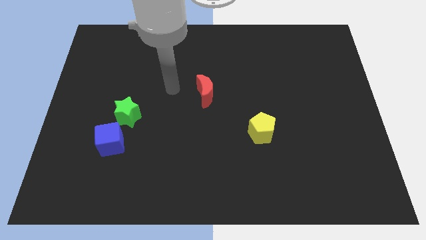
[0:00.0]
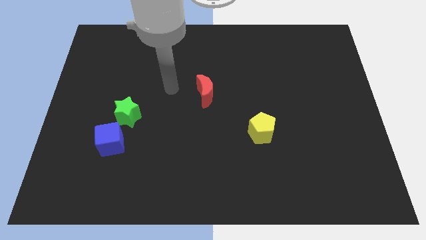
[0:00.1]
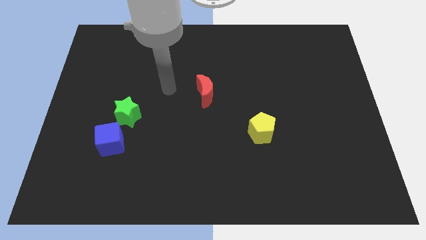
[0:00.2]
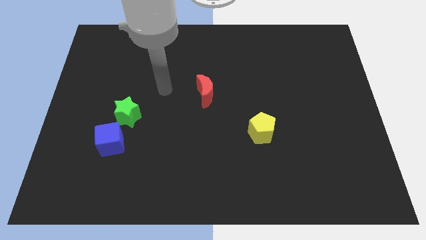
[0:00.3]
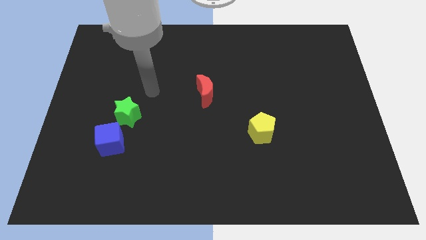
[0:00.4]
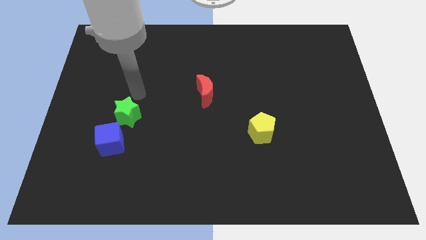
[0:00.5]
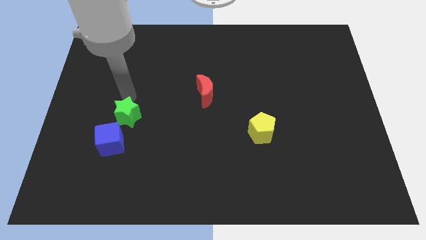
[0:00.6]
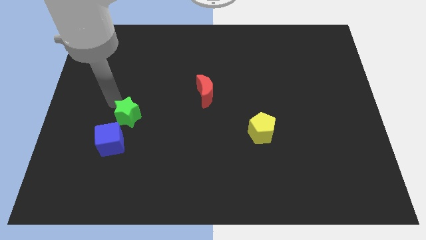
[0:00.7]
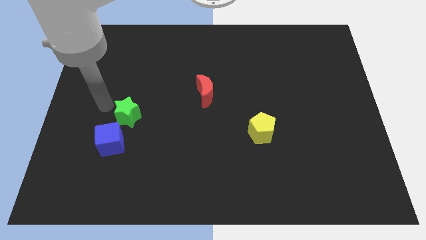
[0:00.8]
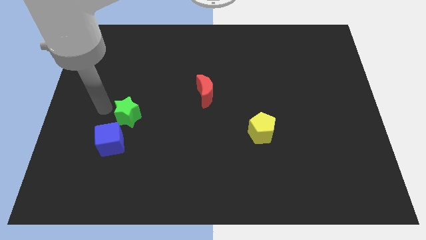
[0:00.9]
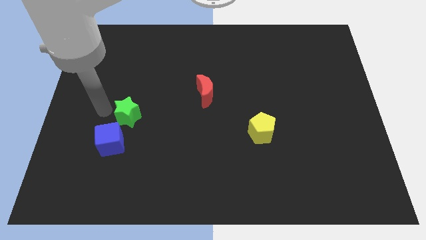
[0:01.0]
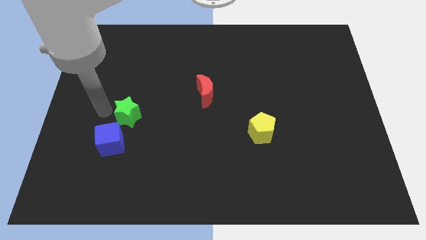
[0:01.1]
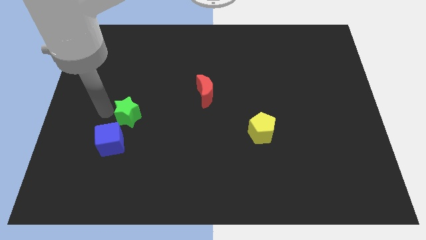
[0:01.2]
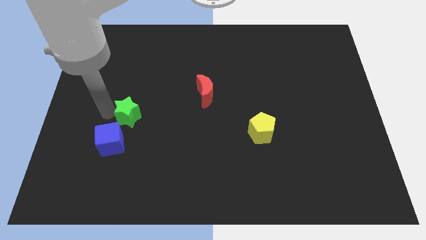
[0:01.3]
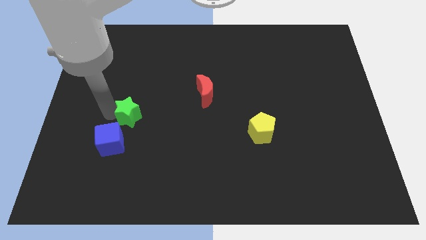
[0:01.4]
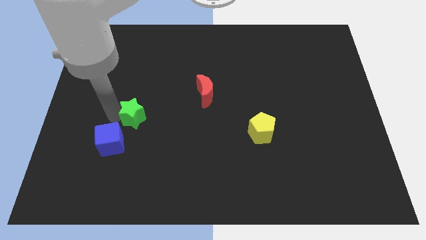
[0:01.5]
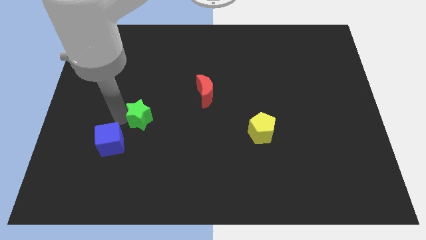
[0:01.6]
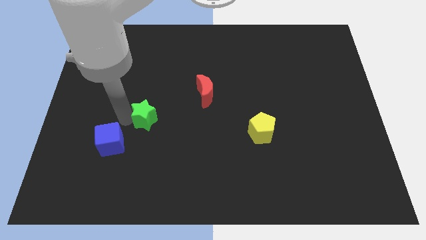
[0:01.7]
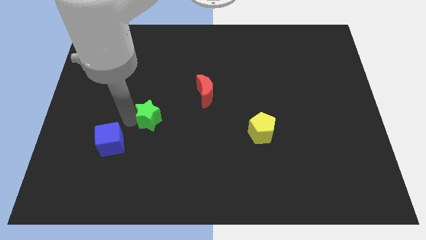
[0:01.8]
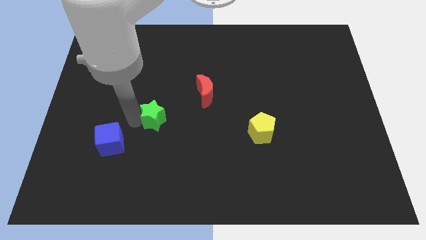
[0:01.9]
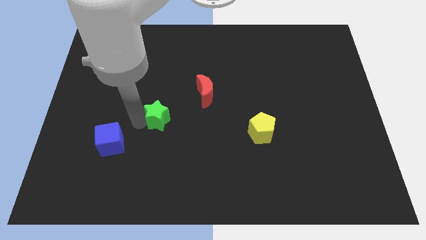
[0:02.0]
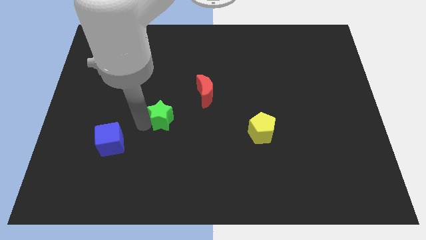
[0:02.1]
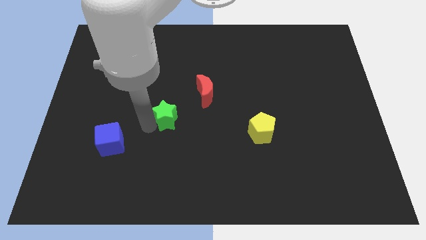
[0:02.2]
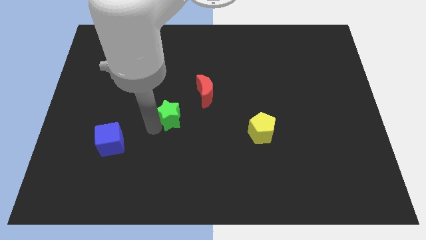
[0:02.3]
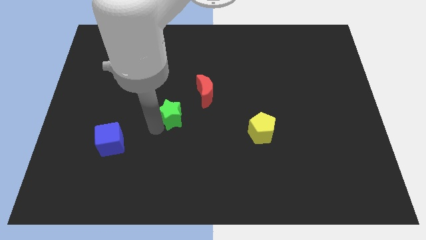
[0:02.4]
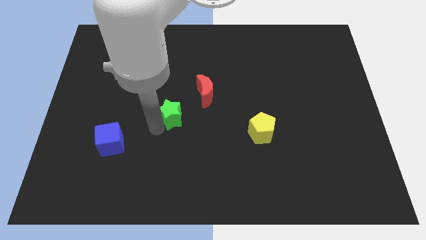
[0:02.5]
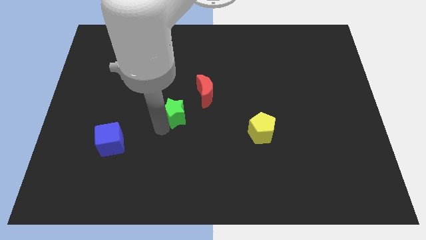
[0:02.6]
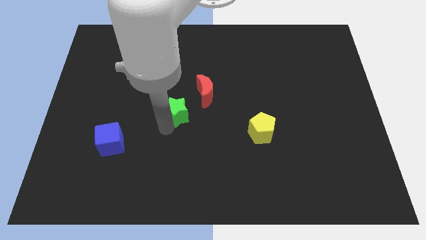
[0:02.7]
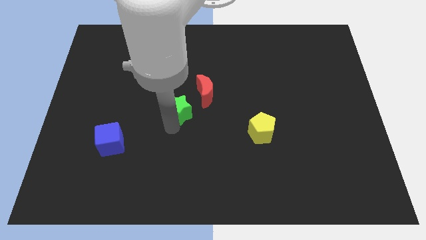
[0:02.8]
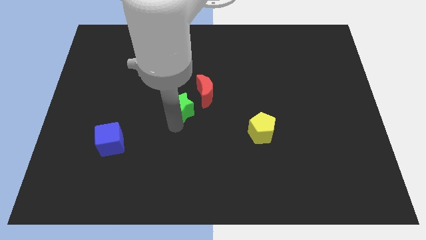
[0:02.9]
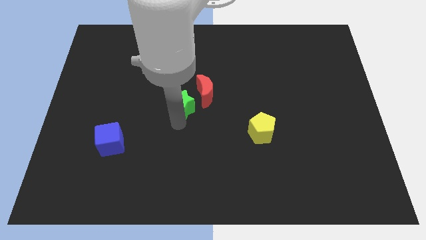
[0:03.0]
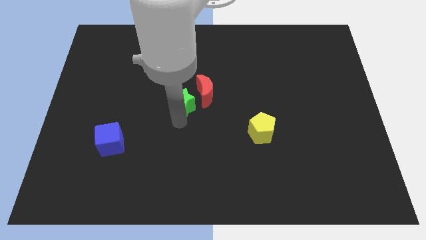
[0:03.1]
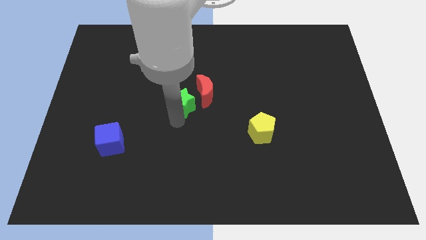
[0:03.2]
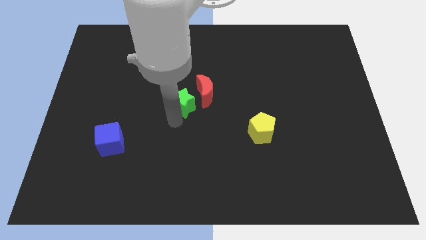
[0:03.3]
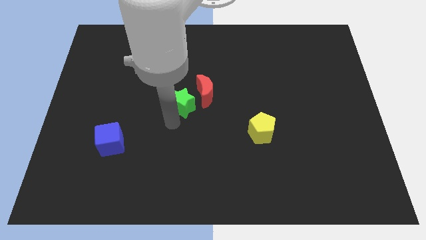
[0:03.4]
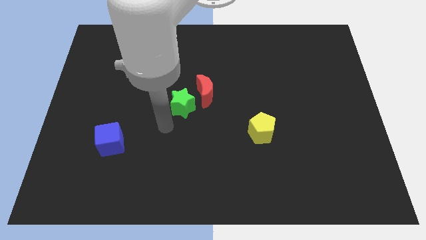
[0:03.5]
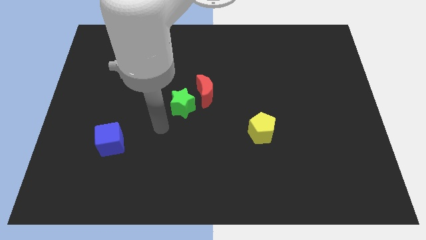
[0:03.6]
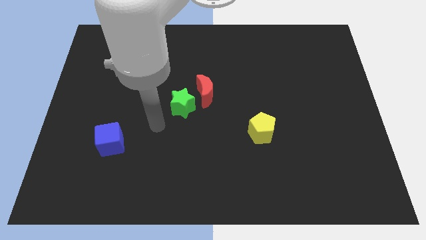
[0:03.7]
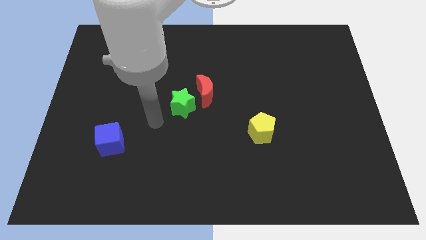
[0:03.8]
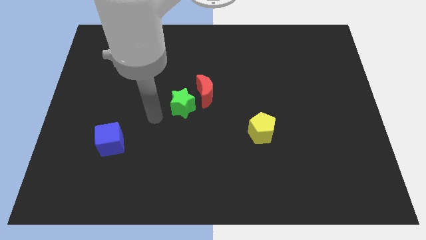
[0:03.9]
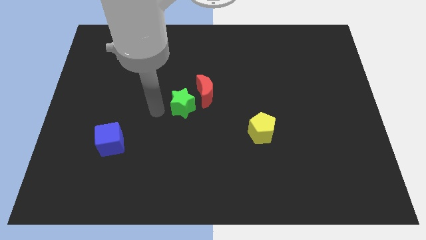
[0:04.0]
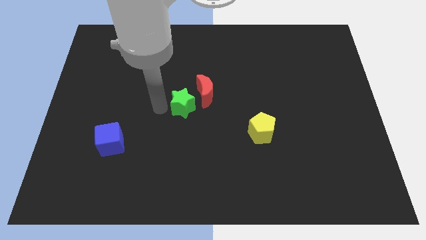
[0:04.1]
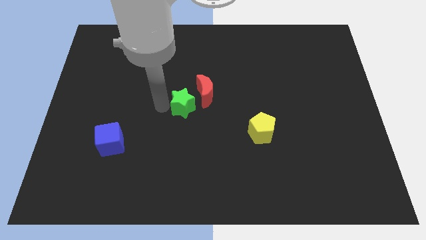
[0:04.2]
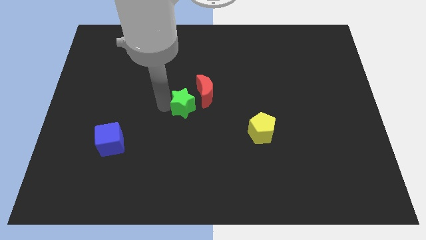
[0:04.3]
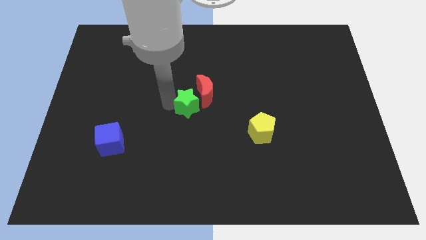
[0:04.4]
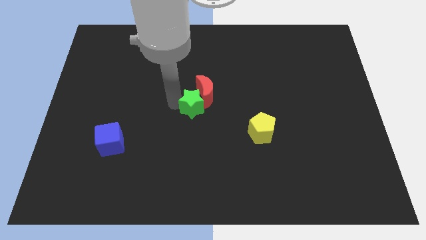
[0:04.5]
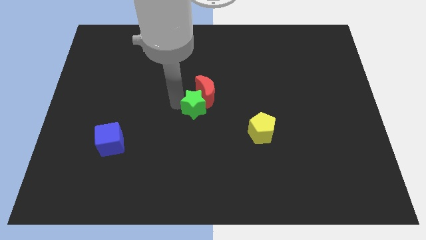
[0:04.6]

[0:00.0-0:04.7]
push the green block close to the red block

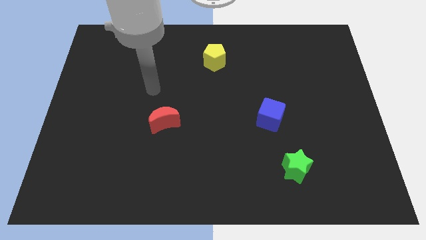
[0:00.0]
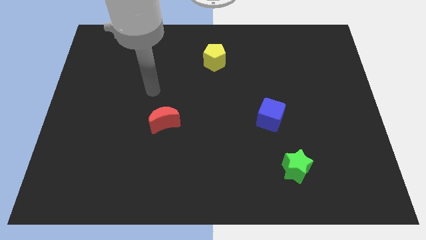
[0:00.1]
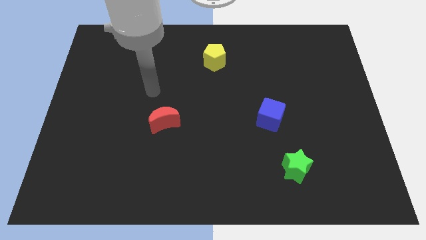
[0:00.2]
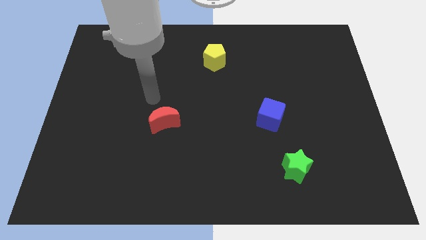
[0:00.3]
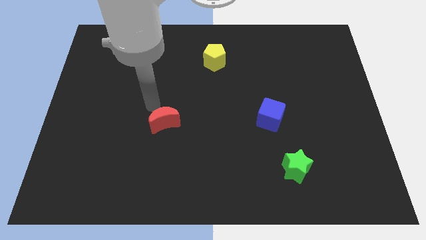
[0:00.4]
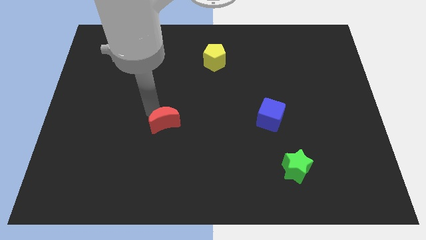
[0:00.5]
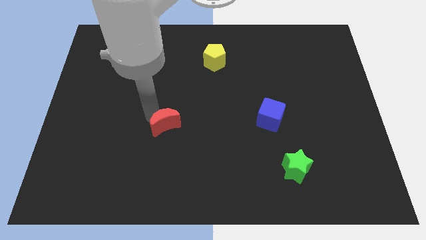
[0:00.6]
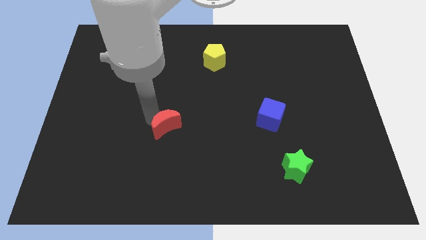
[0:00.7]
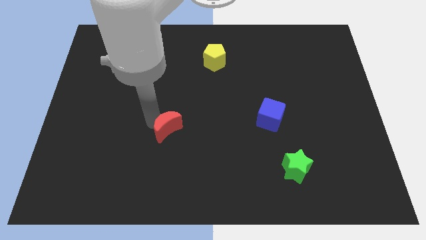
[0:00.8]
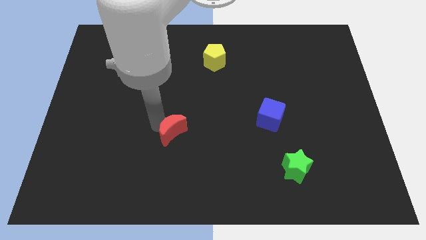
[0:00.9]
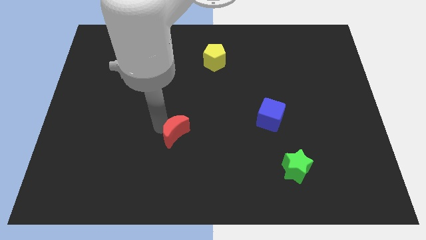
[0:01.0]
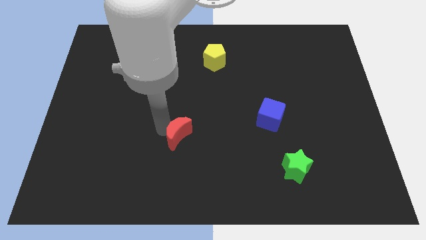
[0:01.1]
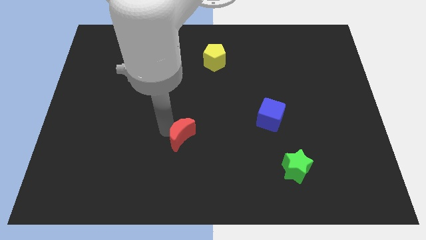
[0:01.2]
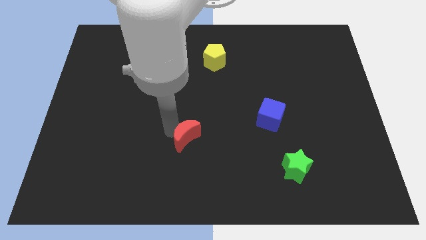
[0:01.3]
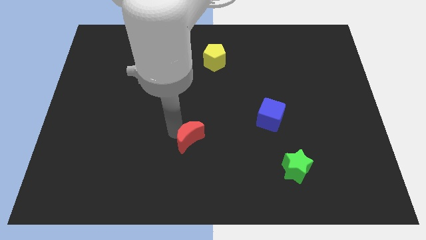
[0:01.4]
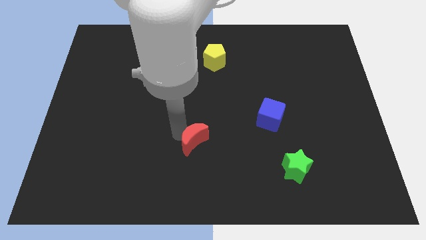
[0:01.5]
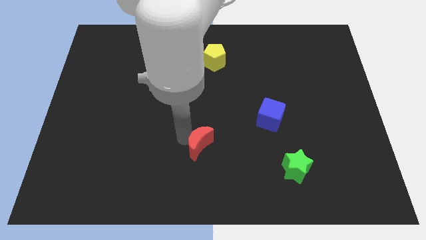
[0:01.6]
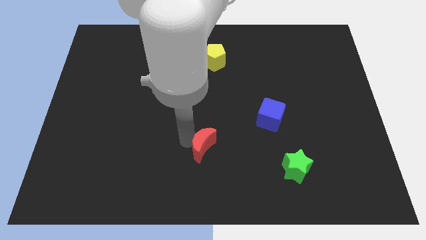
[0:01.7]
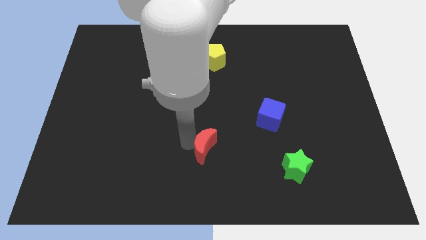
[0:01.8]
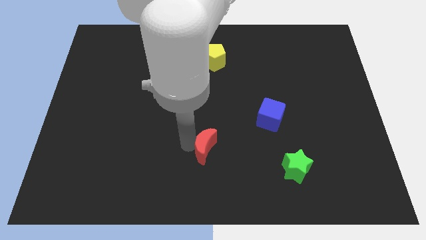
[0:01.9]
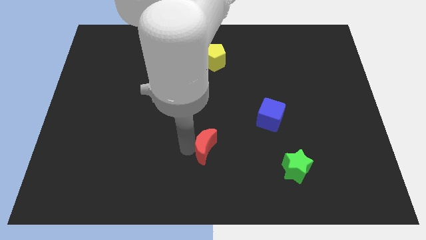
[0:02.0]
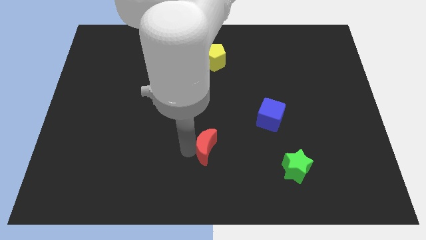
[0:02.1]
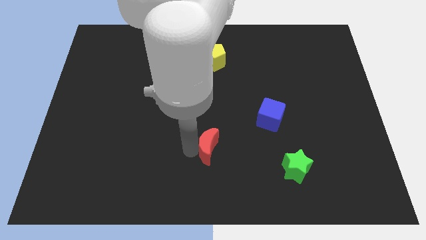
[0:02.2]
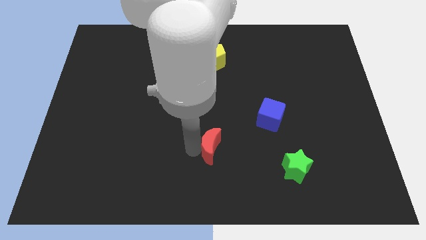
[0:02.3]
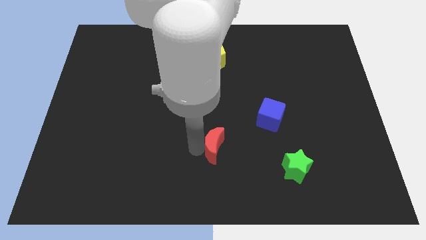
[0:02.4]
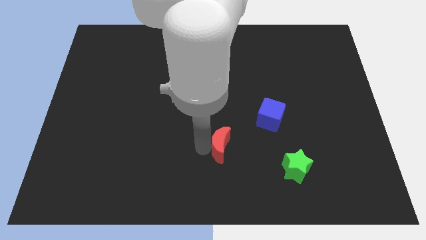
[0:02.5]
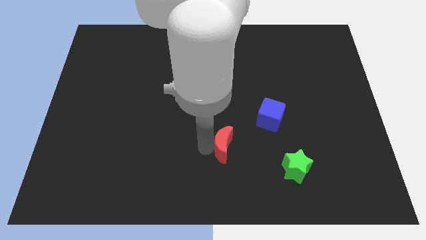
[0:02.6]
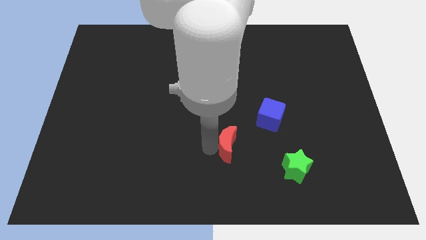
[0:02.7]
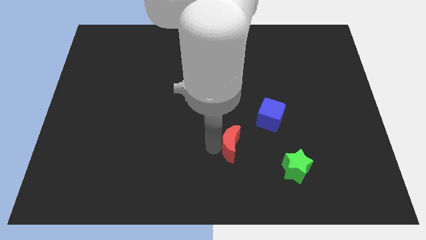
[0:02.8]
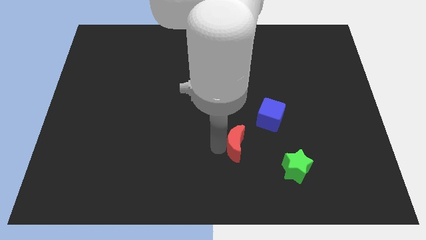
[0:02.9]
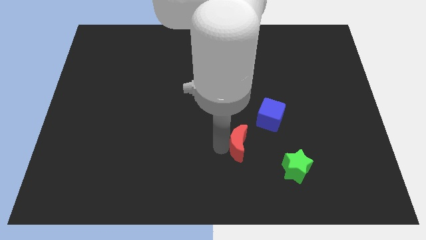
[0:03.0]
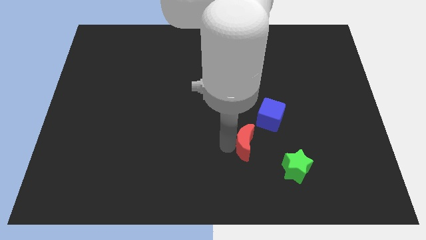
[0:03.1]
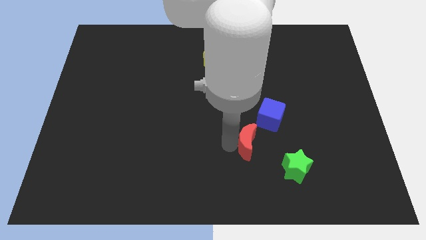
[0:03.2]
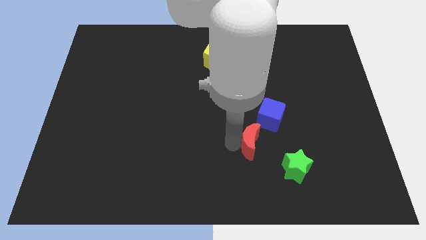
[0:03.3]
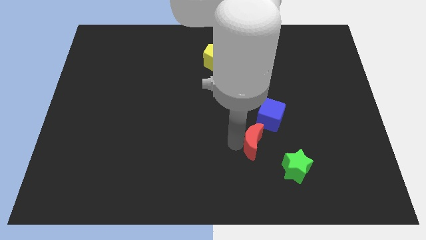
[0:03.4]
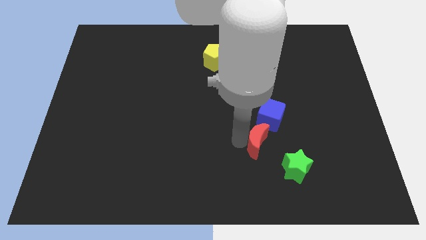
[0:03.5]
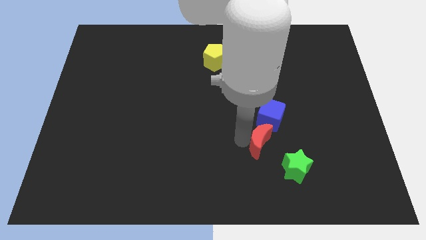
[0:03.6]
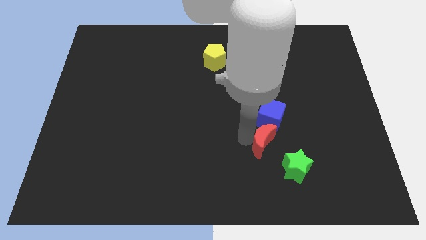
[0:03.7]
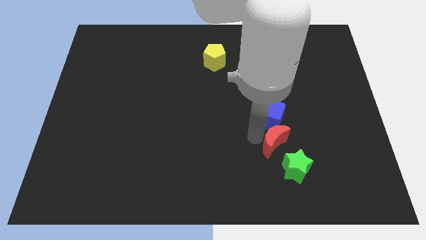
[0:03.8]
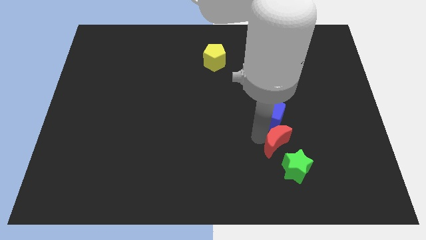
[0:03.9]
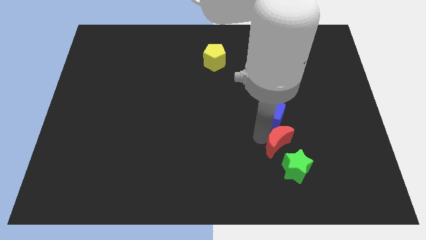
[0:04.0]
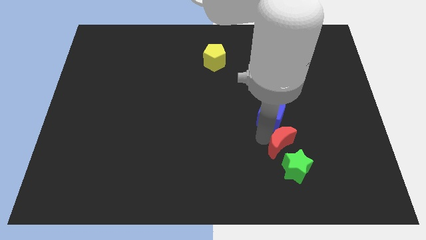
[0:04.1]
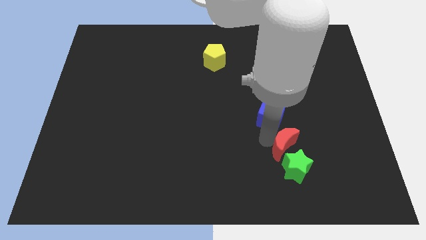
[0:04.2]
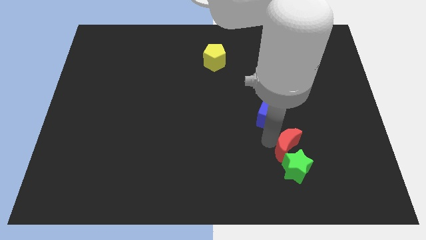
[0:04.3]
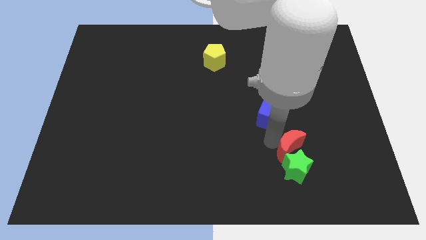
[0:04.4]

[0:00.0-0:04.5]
push the red block to the star
